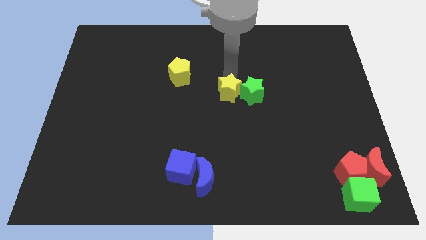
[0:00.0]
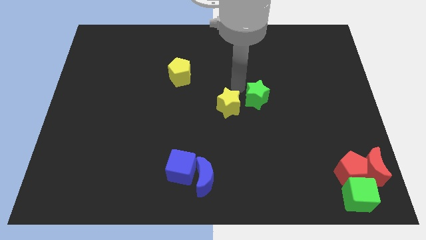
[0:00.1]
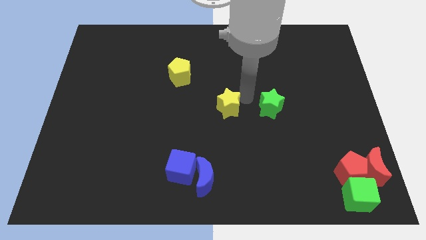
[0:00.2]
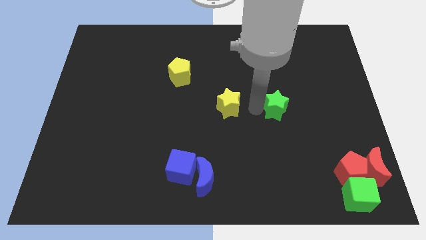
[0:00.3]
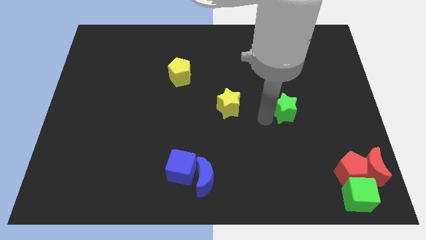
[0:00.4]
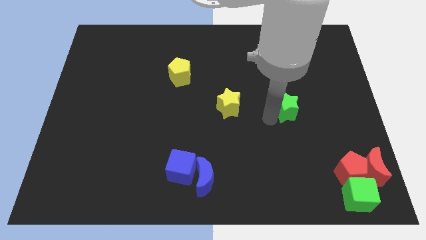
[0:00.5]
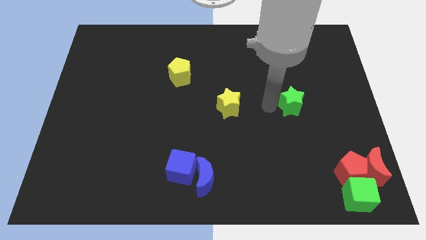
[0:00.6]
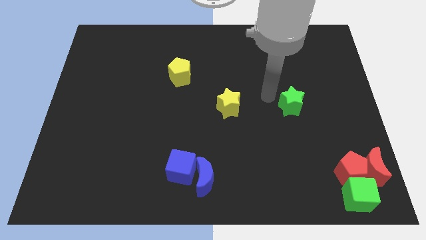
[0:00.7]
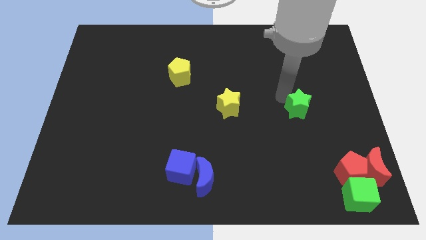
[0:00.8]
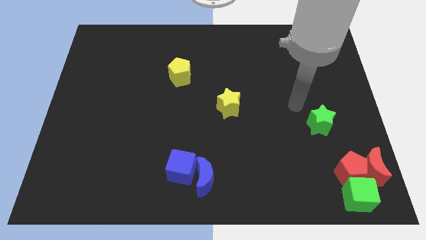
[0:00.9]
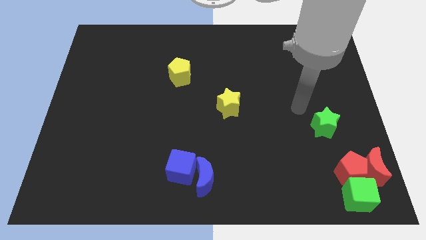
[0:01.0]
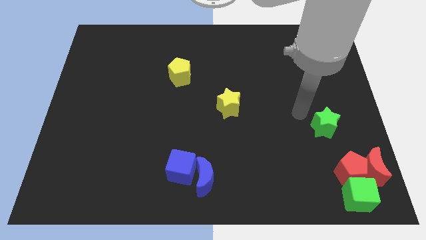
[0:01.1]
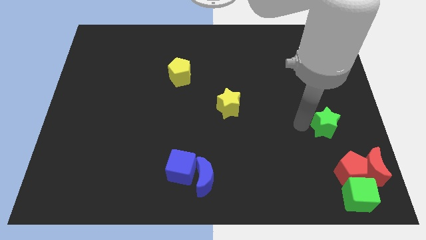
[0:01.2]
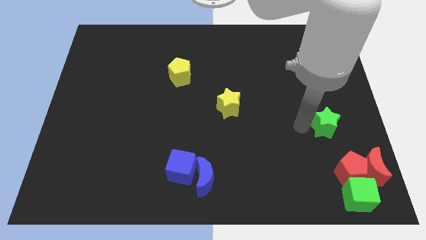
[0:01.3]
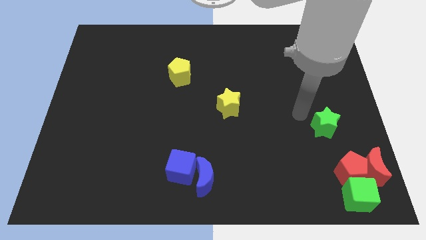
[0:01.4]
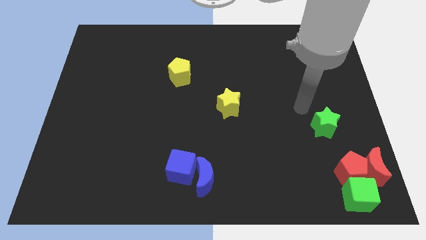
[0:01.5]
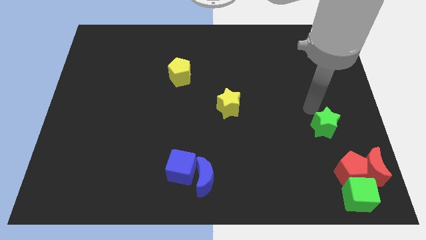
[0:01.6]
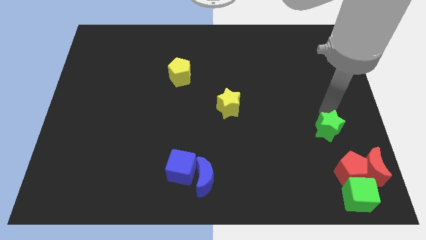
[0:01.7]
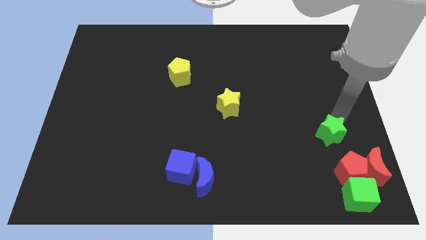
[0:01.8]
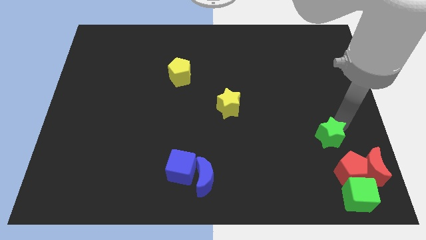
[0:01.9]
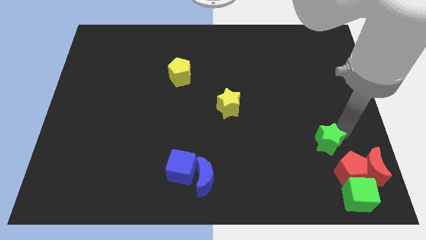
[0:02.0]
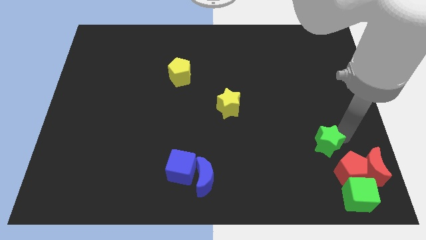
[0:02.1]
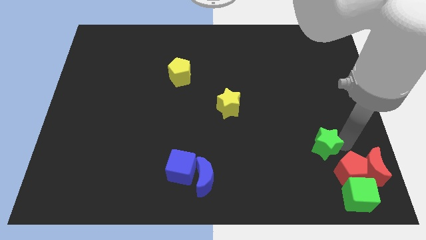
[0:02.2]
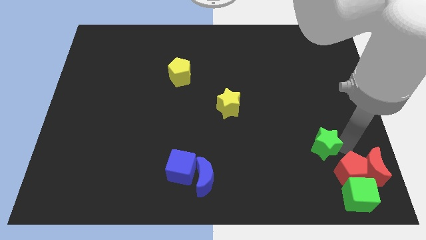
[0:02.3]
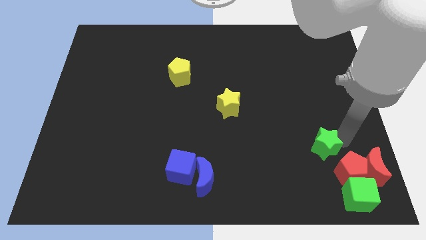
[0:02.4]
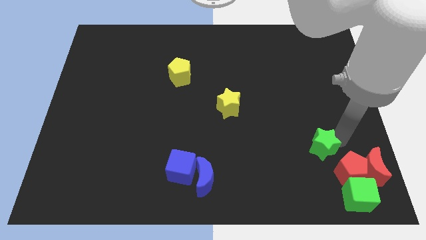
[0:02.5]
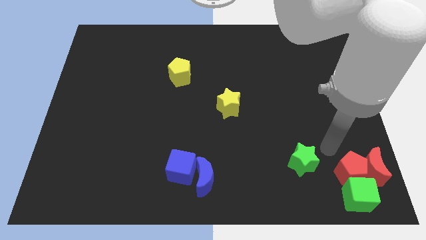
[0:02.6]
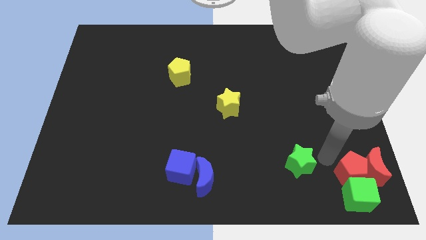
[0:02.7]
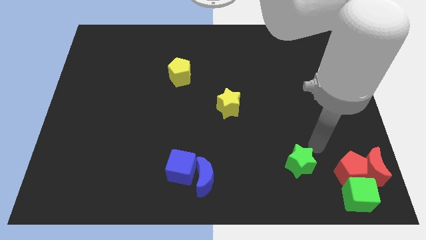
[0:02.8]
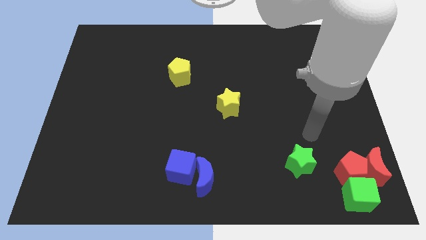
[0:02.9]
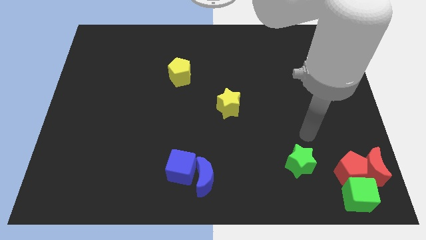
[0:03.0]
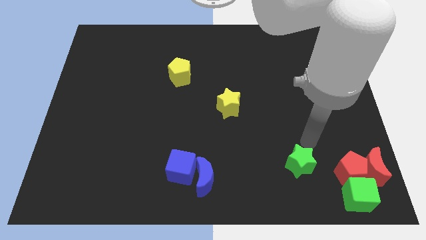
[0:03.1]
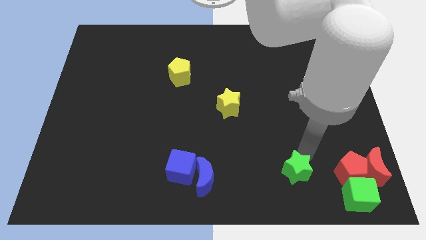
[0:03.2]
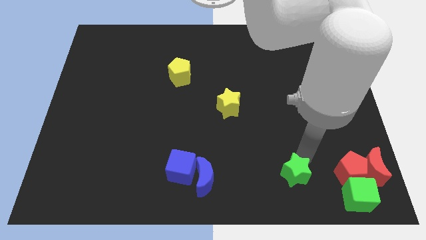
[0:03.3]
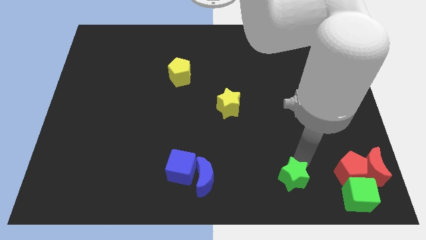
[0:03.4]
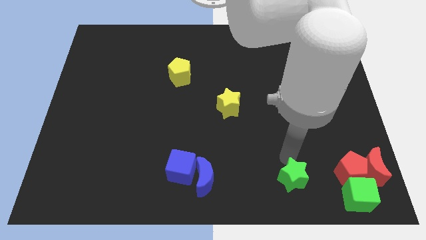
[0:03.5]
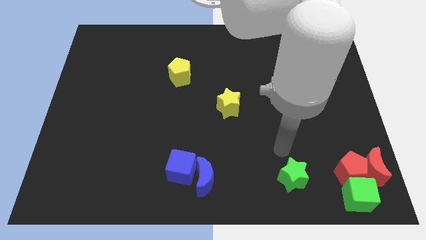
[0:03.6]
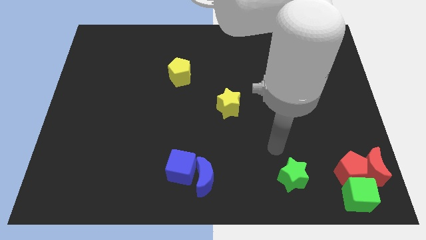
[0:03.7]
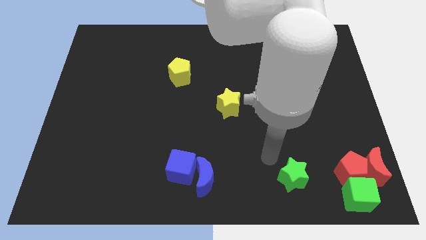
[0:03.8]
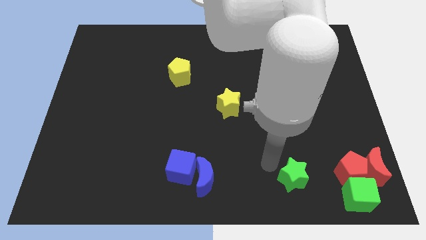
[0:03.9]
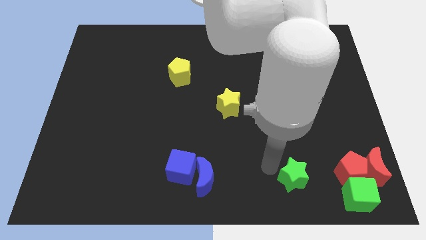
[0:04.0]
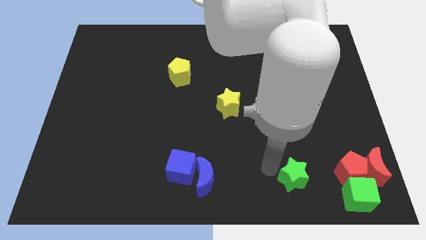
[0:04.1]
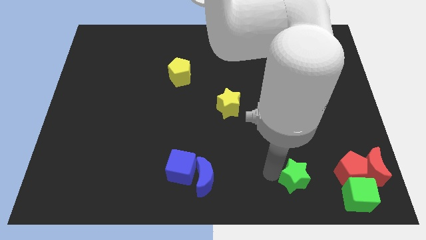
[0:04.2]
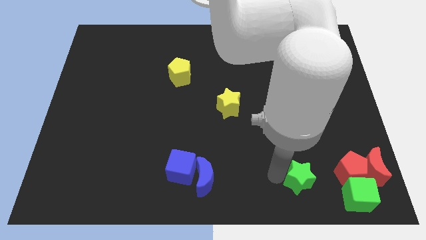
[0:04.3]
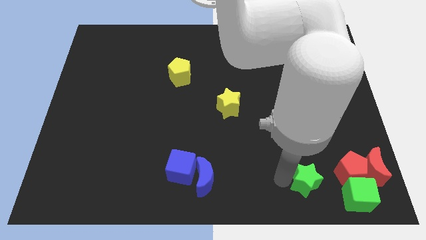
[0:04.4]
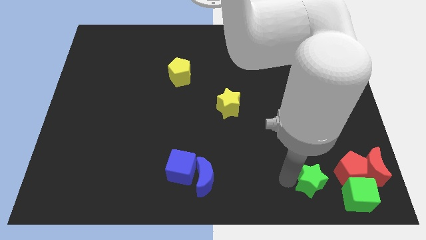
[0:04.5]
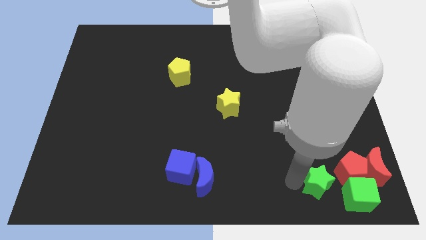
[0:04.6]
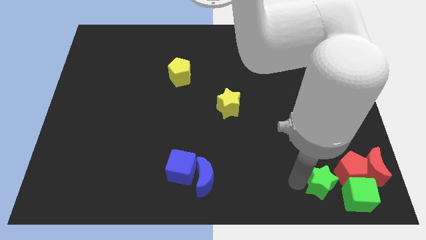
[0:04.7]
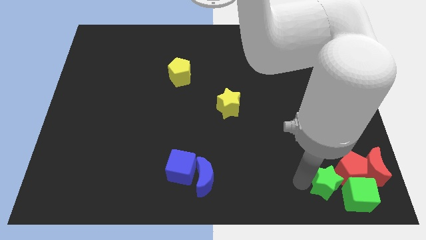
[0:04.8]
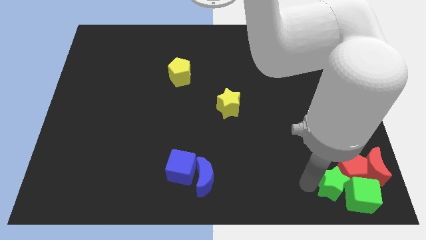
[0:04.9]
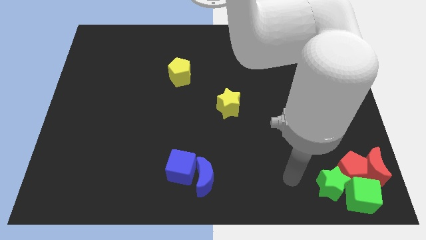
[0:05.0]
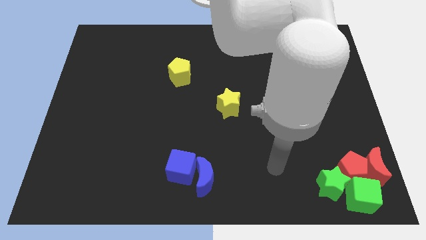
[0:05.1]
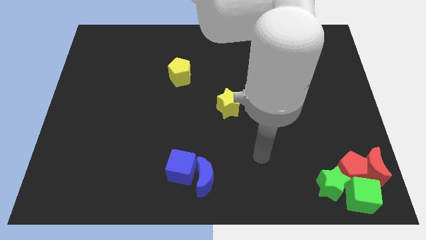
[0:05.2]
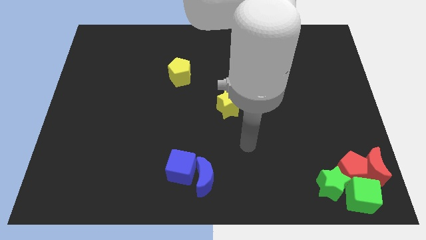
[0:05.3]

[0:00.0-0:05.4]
push the green star into the green cube

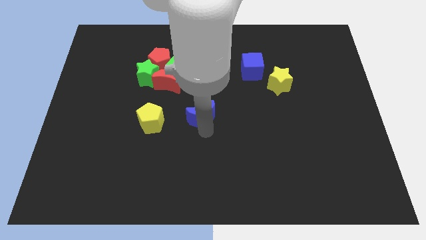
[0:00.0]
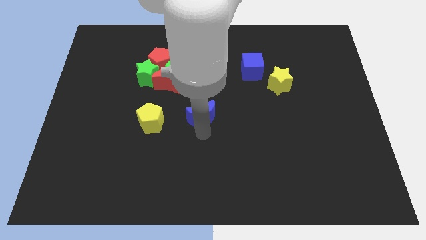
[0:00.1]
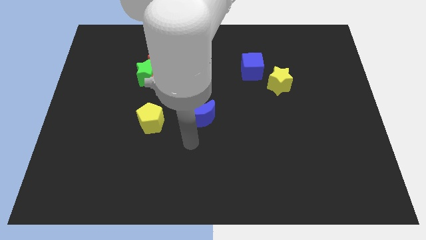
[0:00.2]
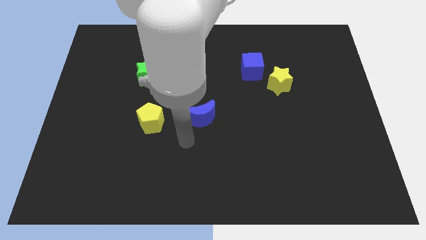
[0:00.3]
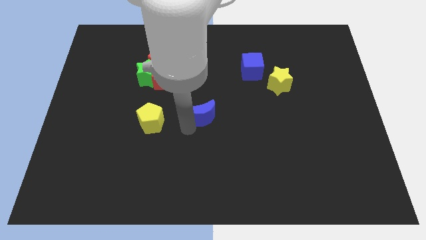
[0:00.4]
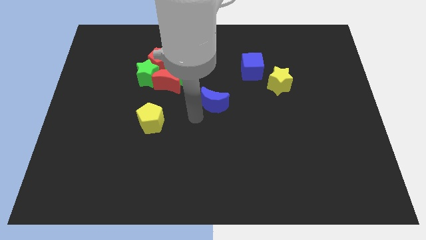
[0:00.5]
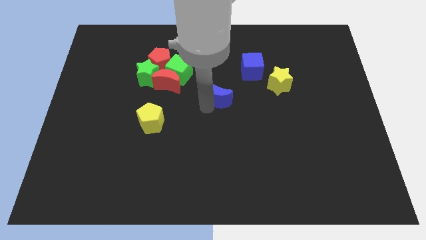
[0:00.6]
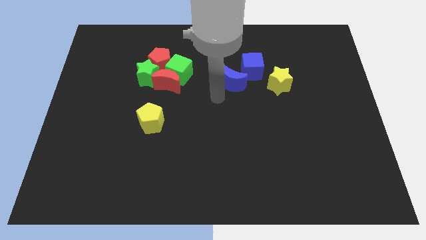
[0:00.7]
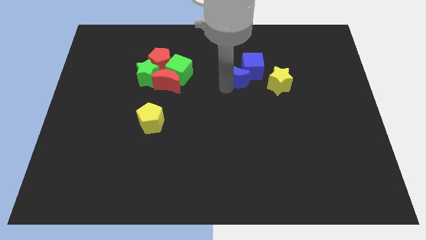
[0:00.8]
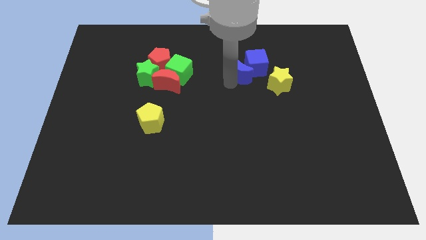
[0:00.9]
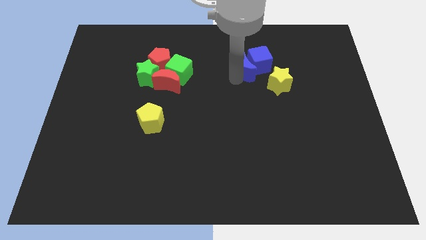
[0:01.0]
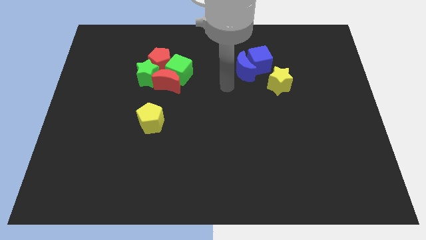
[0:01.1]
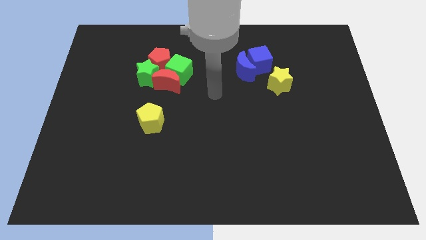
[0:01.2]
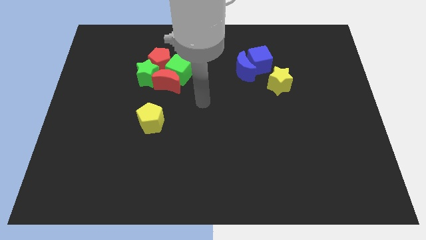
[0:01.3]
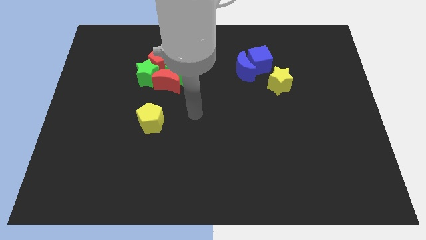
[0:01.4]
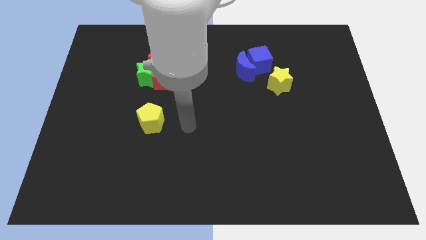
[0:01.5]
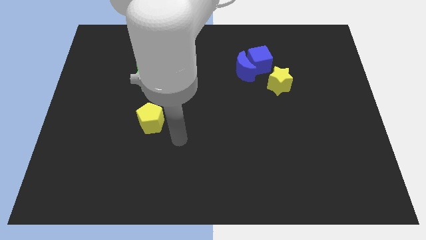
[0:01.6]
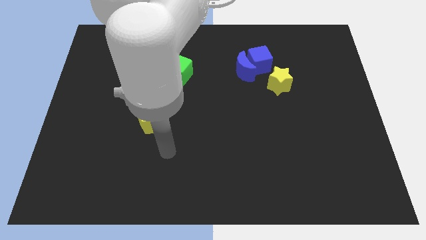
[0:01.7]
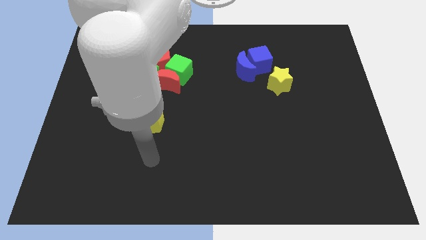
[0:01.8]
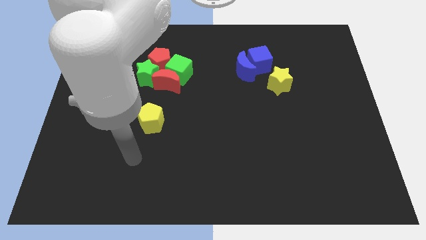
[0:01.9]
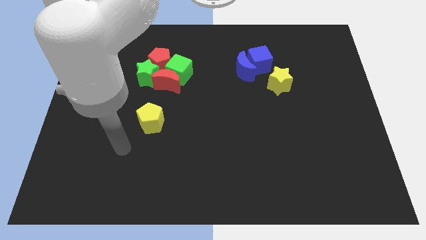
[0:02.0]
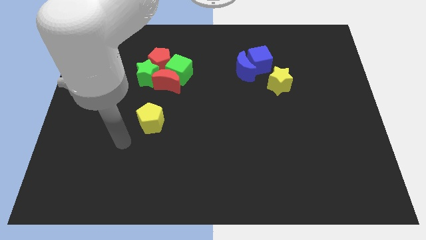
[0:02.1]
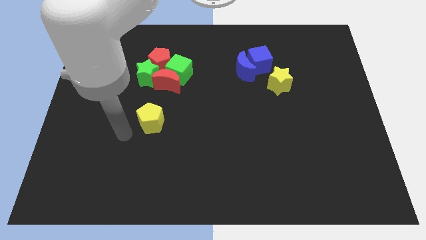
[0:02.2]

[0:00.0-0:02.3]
push the blue moon into the blue block

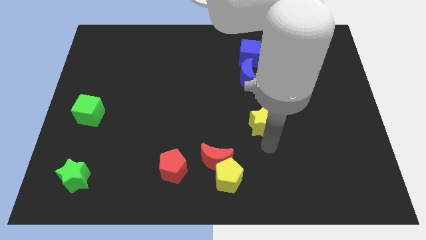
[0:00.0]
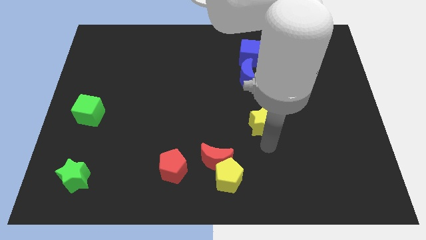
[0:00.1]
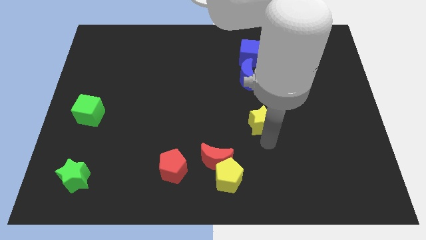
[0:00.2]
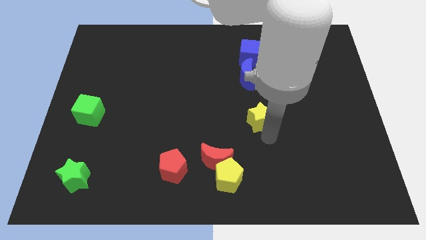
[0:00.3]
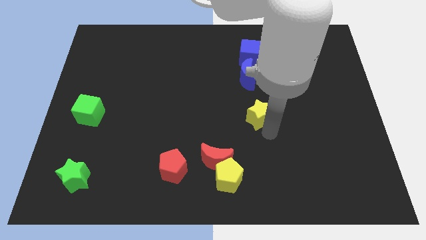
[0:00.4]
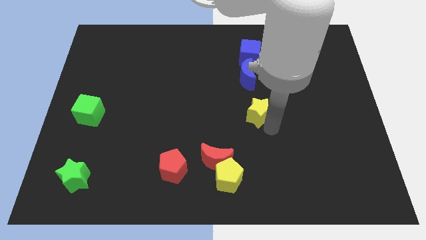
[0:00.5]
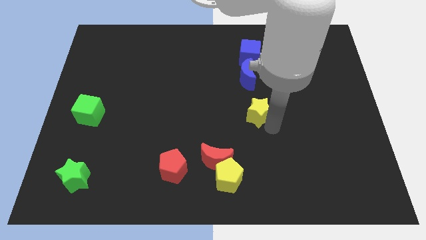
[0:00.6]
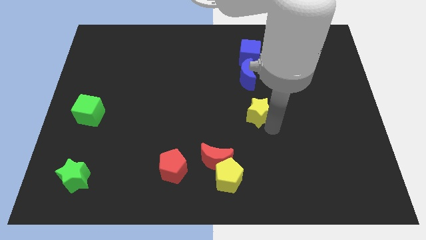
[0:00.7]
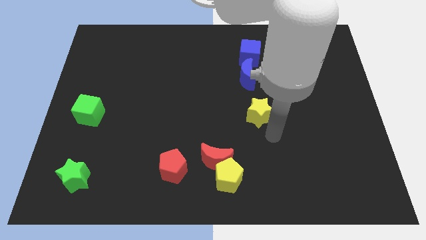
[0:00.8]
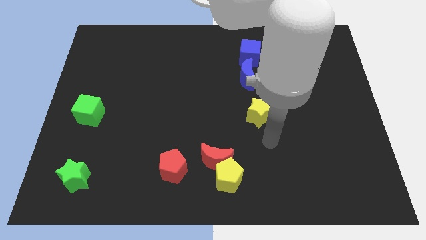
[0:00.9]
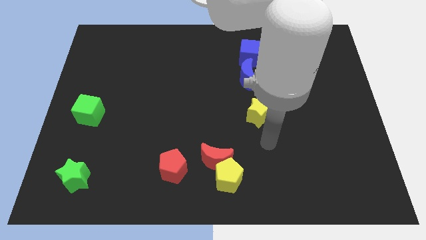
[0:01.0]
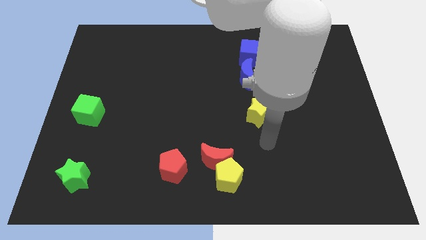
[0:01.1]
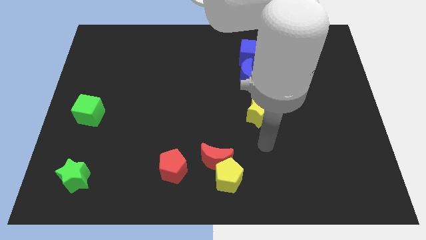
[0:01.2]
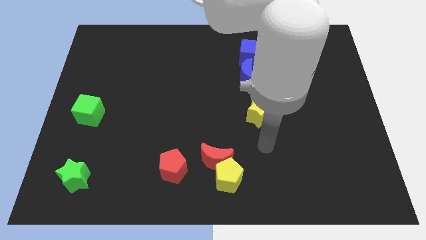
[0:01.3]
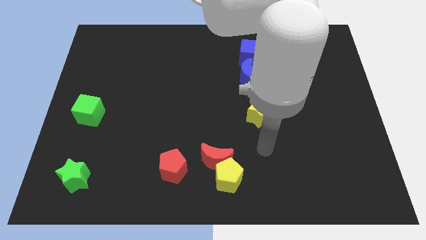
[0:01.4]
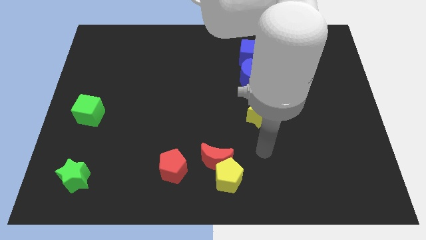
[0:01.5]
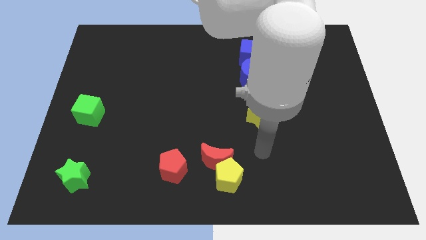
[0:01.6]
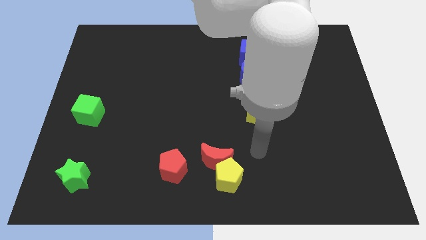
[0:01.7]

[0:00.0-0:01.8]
place the yellow star below blue moon
